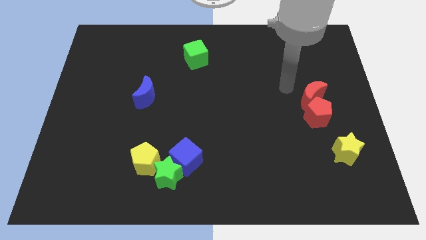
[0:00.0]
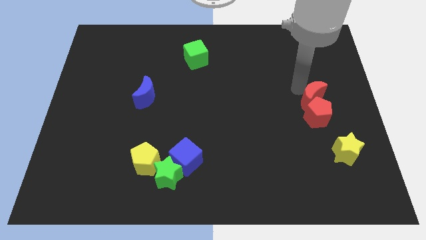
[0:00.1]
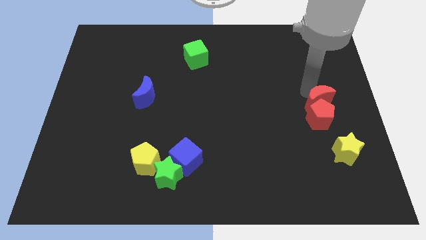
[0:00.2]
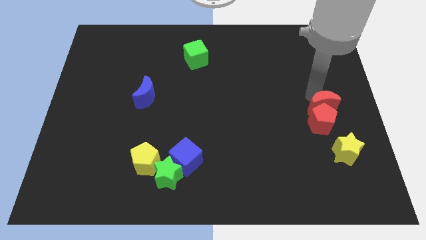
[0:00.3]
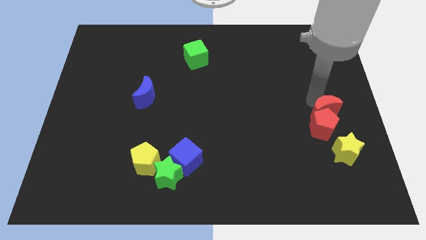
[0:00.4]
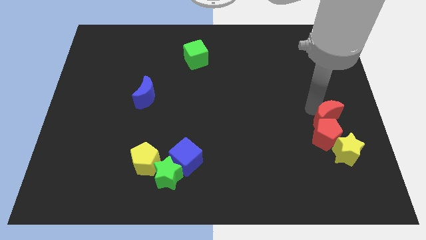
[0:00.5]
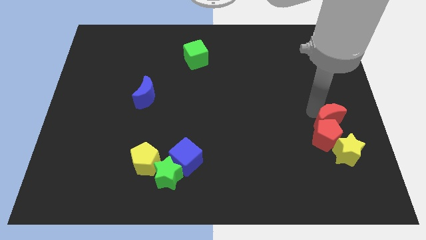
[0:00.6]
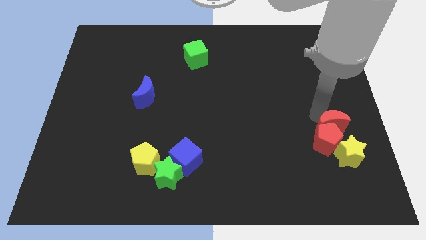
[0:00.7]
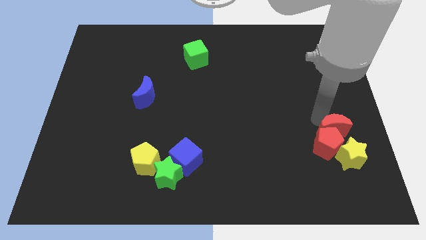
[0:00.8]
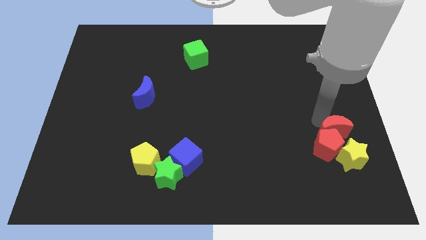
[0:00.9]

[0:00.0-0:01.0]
push the red moon and red pentagon near to the yellow star

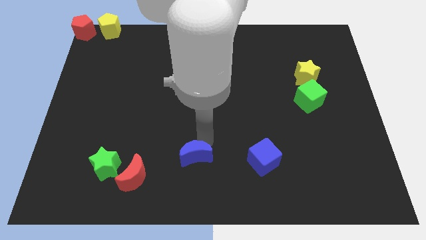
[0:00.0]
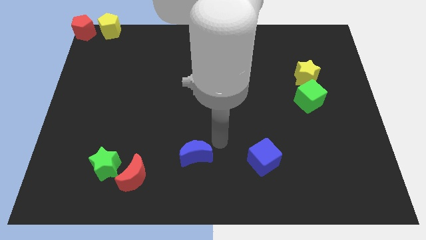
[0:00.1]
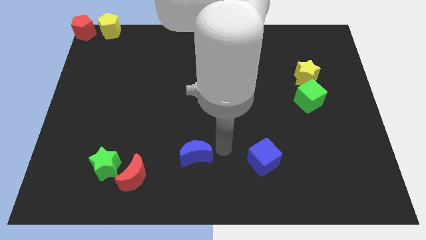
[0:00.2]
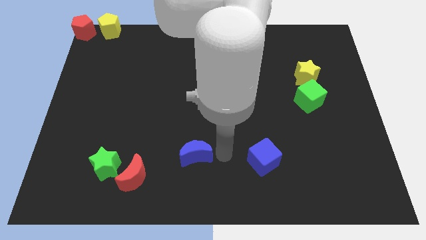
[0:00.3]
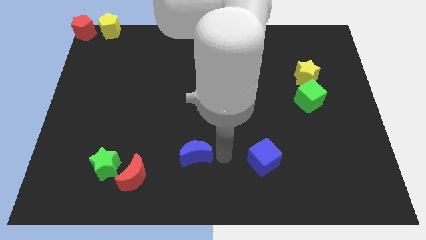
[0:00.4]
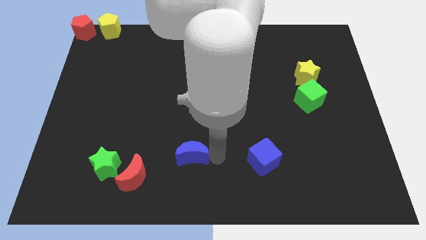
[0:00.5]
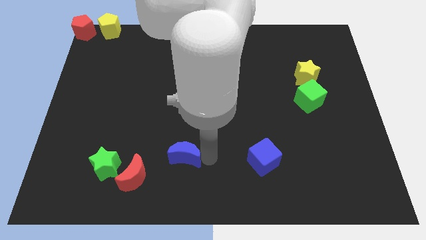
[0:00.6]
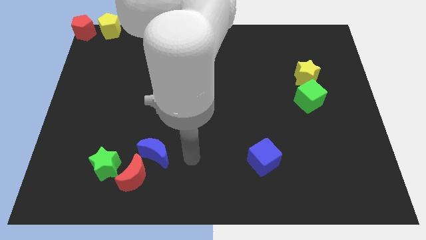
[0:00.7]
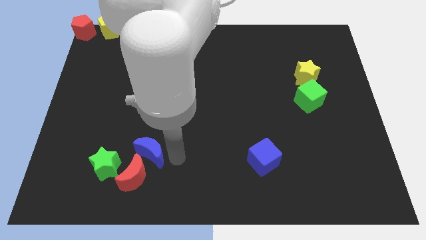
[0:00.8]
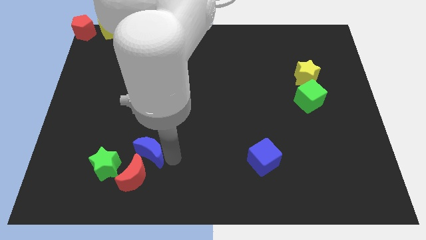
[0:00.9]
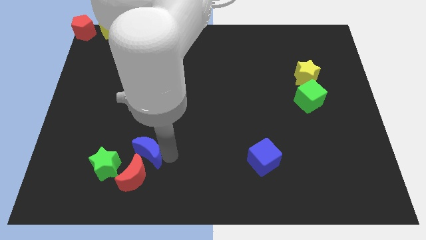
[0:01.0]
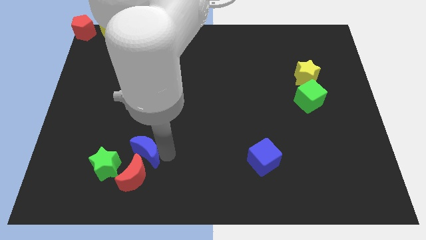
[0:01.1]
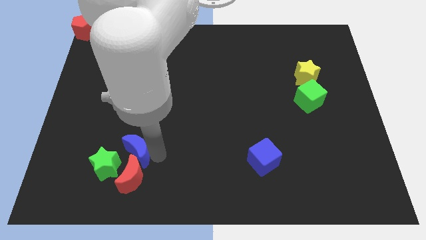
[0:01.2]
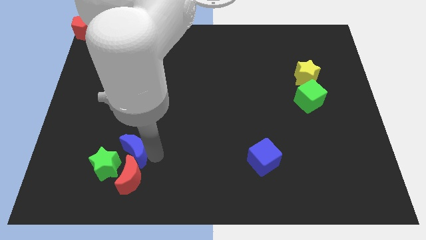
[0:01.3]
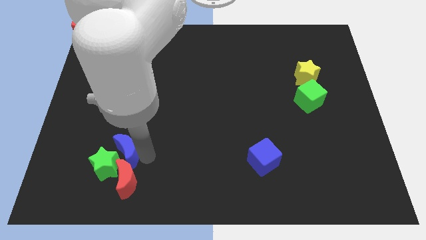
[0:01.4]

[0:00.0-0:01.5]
push the blue crescent to the top of the red crescent

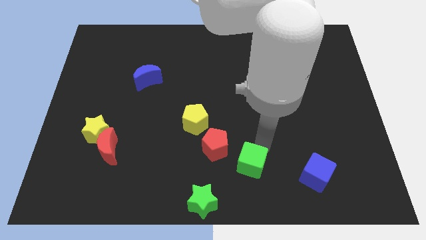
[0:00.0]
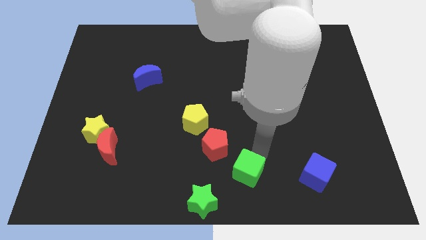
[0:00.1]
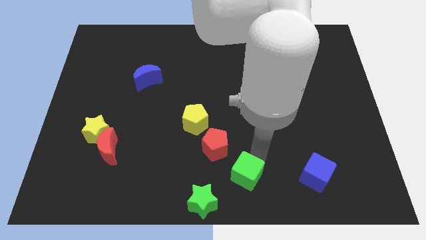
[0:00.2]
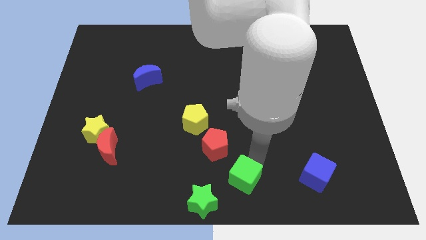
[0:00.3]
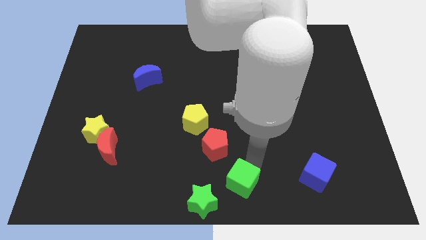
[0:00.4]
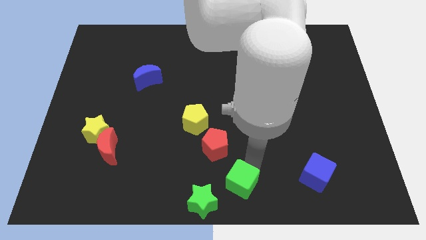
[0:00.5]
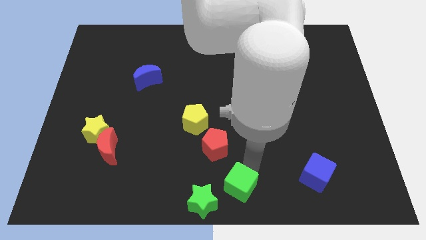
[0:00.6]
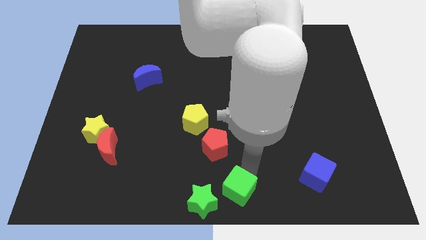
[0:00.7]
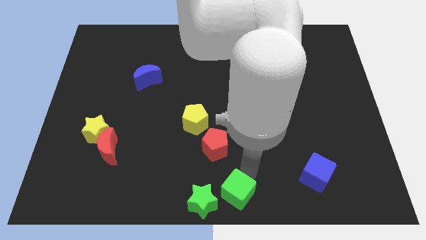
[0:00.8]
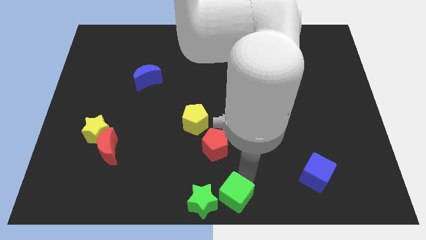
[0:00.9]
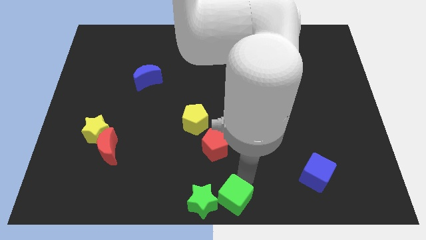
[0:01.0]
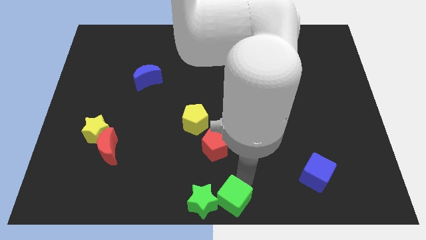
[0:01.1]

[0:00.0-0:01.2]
push the green cube into the green star

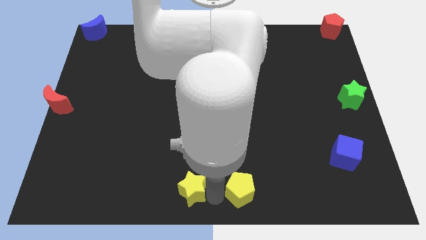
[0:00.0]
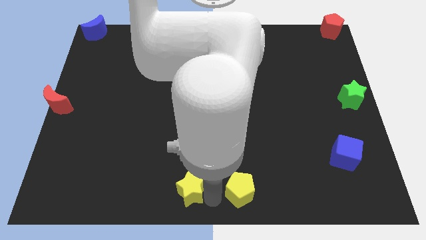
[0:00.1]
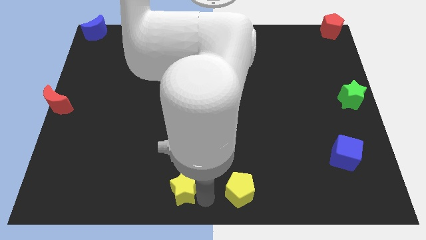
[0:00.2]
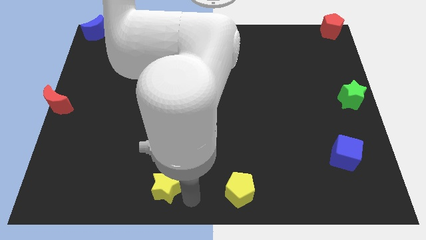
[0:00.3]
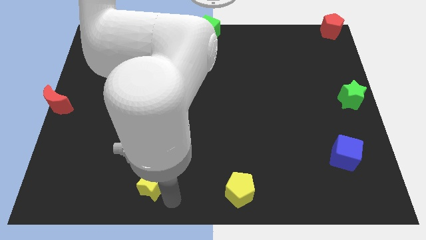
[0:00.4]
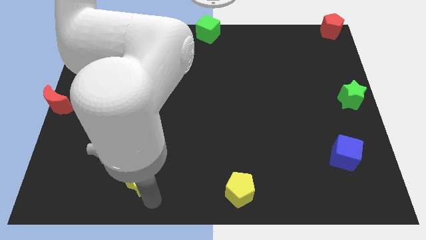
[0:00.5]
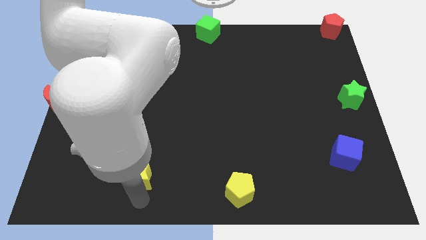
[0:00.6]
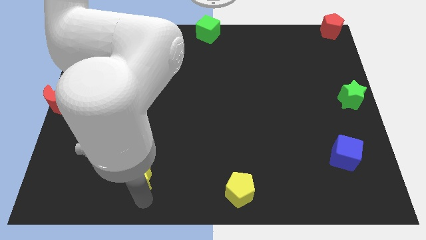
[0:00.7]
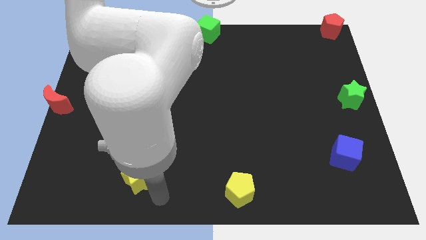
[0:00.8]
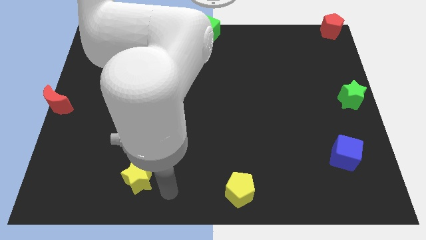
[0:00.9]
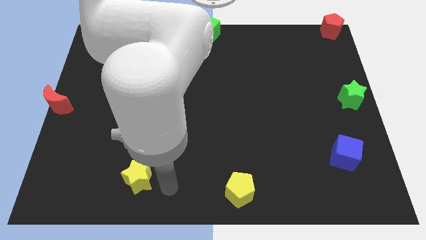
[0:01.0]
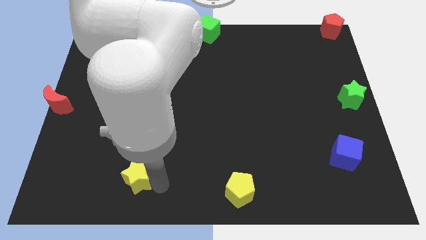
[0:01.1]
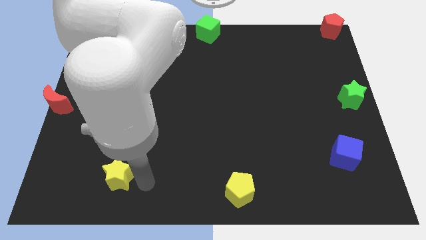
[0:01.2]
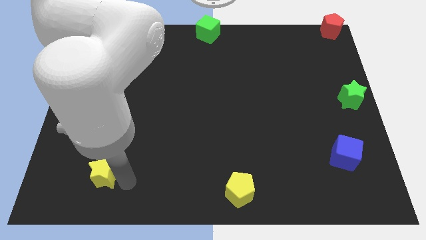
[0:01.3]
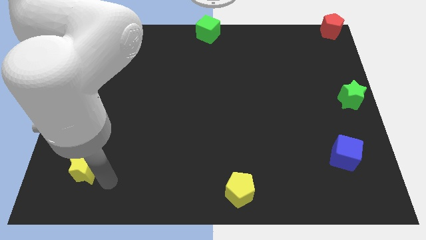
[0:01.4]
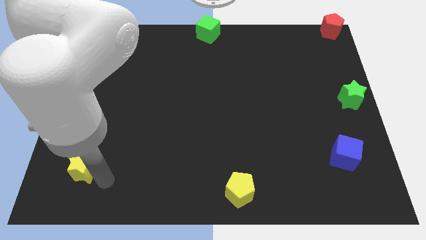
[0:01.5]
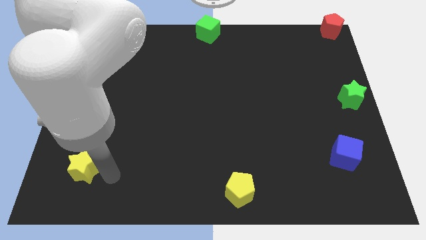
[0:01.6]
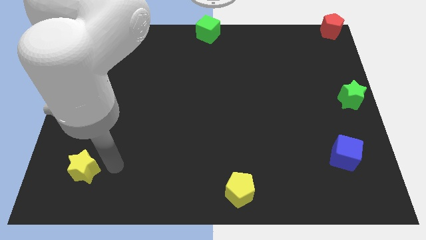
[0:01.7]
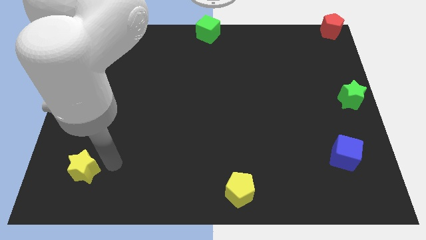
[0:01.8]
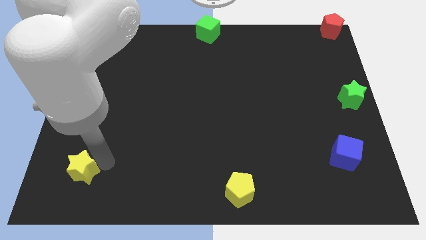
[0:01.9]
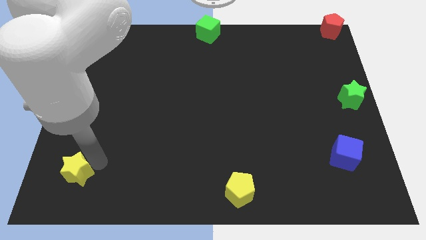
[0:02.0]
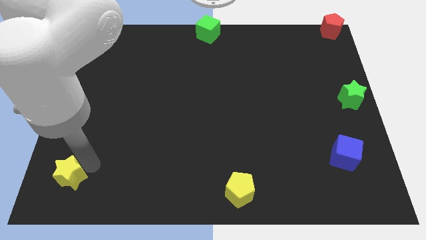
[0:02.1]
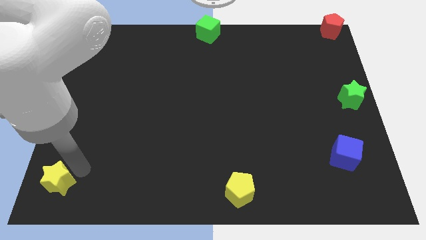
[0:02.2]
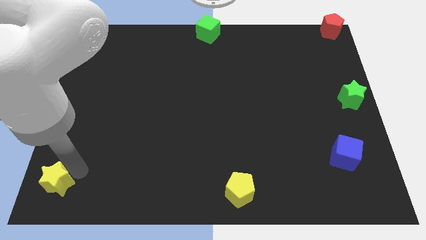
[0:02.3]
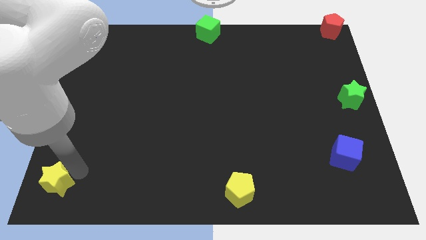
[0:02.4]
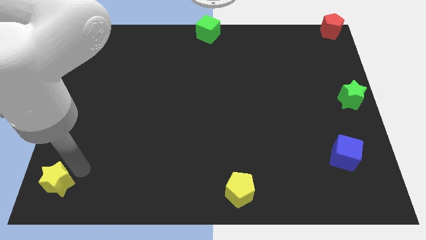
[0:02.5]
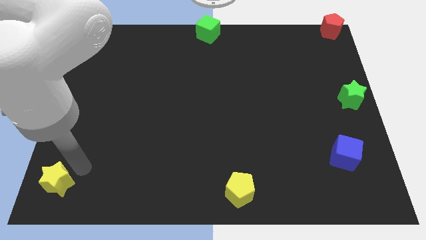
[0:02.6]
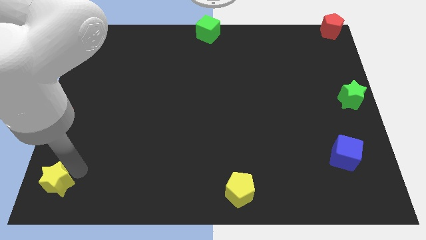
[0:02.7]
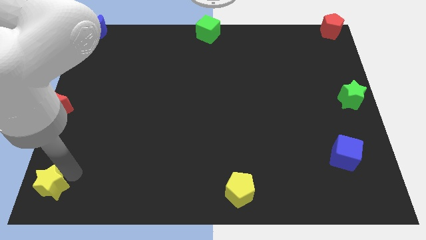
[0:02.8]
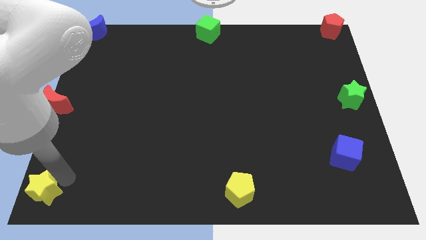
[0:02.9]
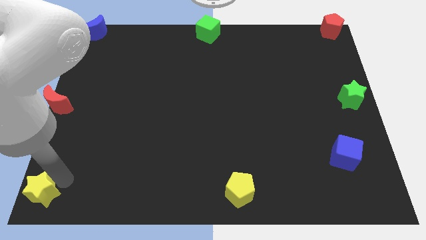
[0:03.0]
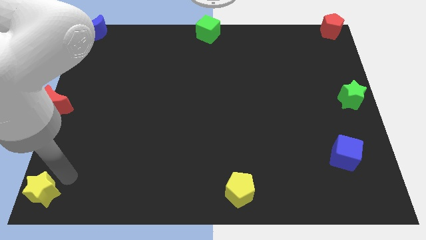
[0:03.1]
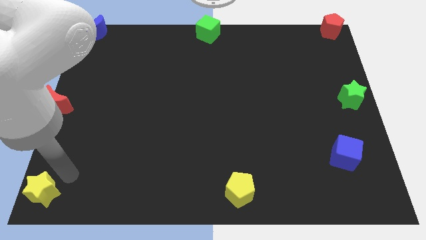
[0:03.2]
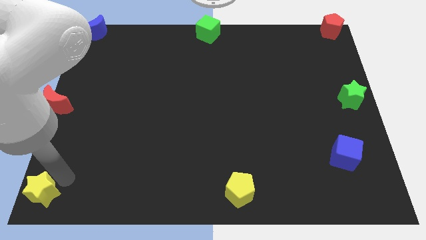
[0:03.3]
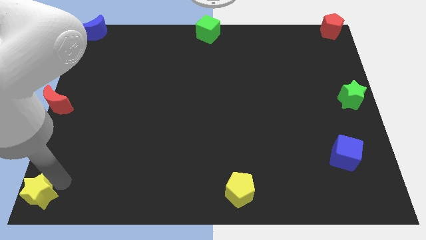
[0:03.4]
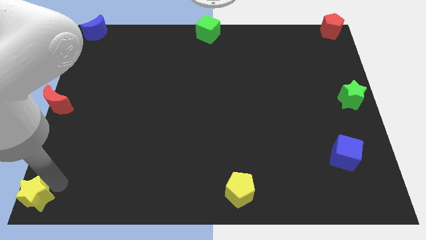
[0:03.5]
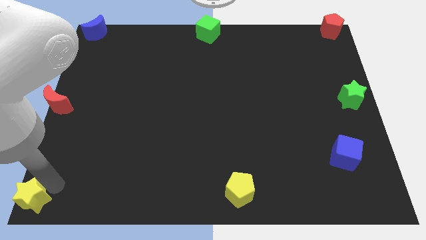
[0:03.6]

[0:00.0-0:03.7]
drag the yellow star towards the bottom left corner of the board

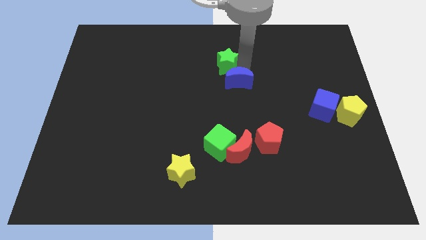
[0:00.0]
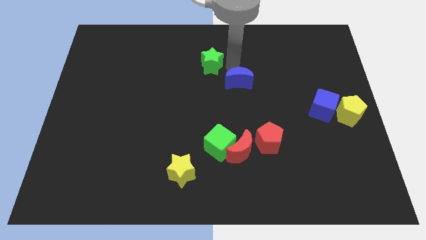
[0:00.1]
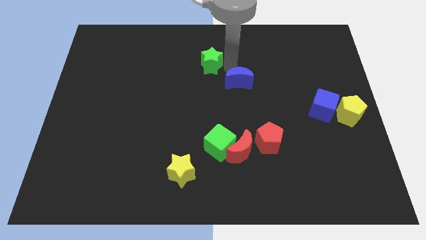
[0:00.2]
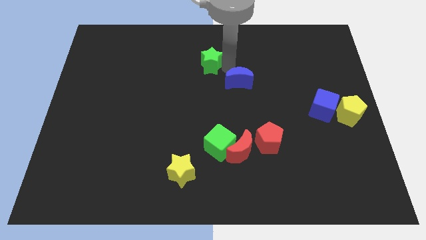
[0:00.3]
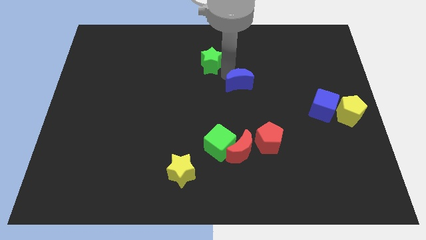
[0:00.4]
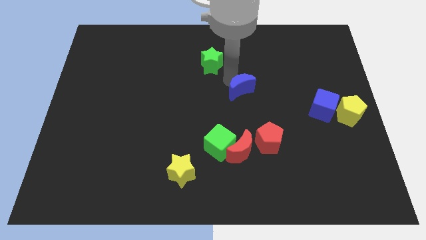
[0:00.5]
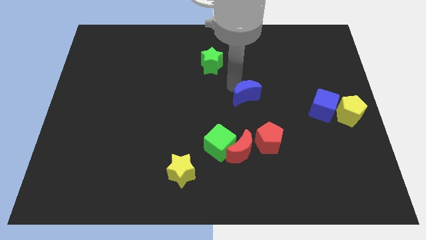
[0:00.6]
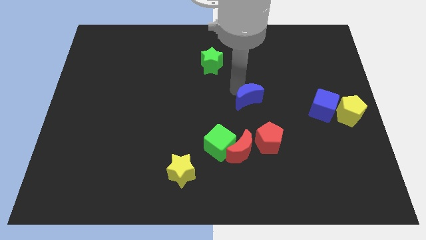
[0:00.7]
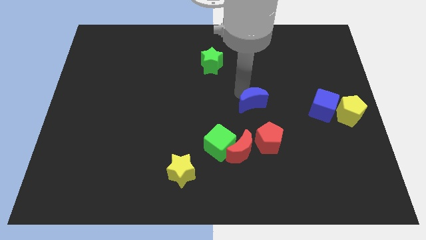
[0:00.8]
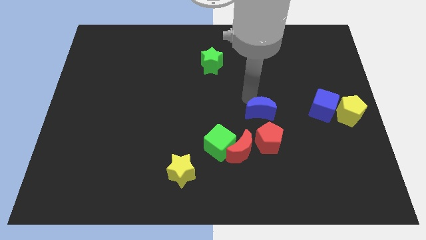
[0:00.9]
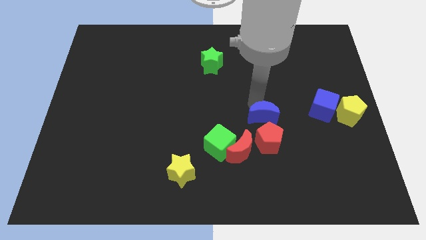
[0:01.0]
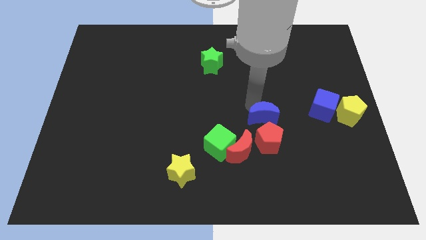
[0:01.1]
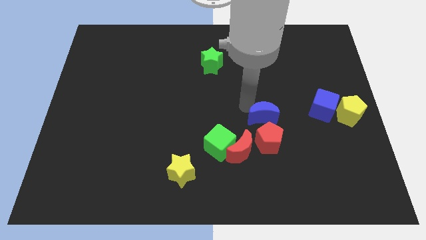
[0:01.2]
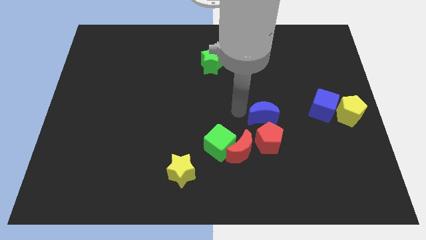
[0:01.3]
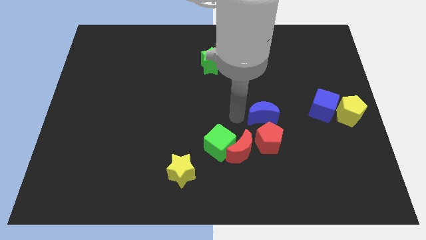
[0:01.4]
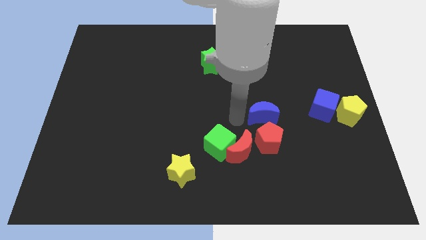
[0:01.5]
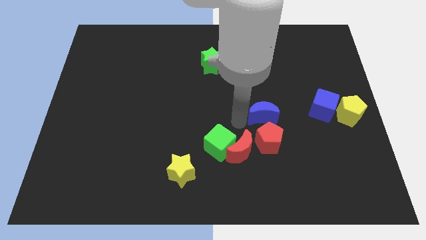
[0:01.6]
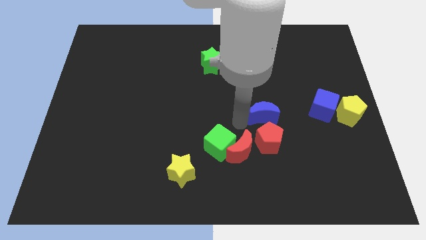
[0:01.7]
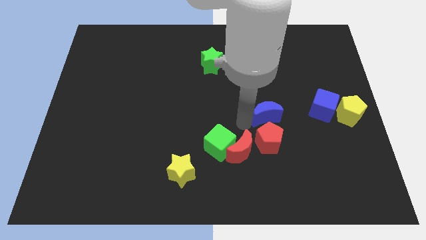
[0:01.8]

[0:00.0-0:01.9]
place the blue crescent above the red pentagon
